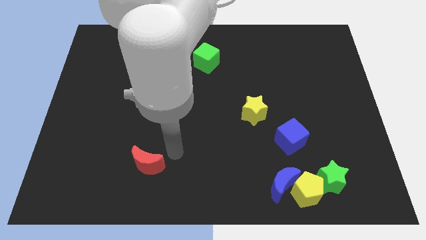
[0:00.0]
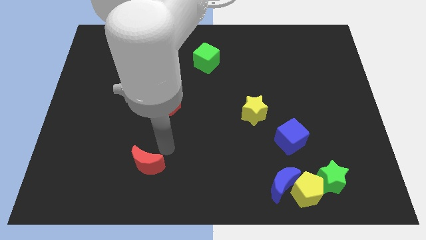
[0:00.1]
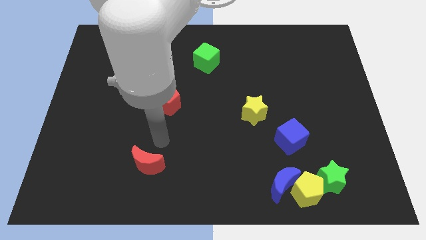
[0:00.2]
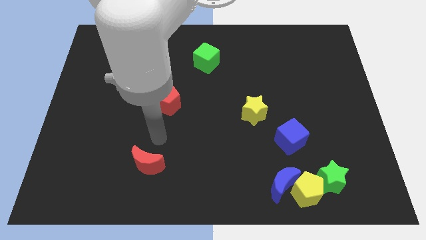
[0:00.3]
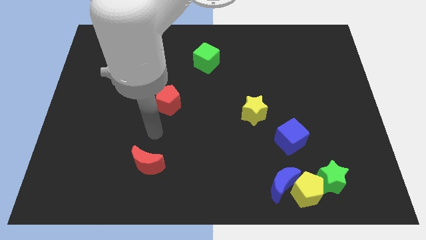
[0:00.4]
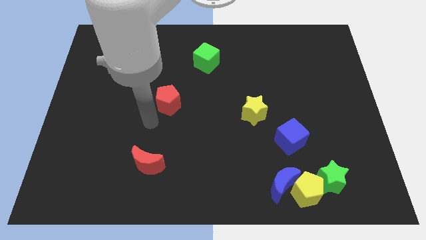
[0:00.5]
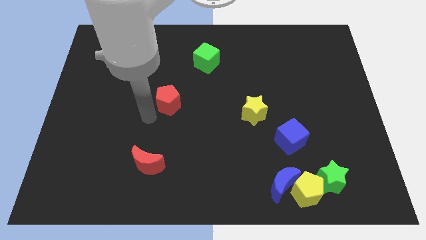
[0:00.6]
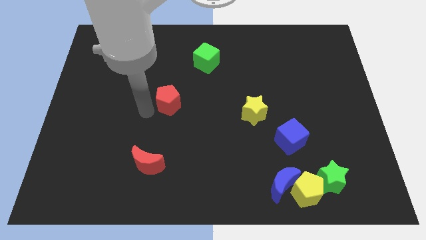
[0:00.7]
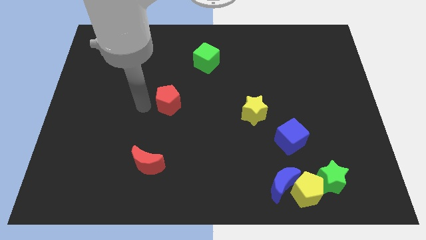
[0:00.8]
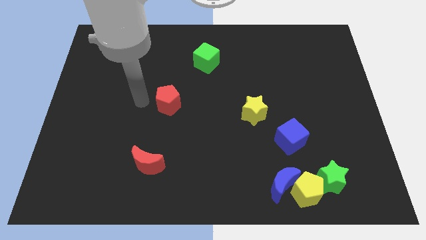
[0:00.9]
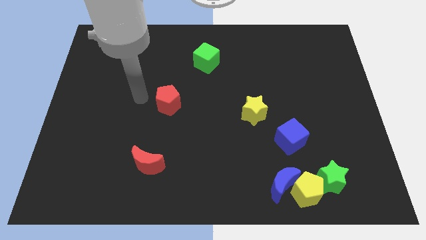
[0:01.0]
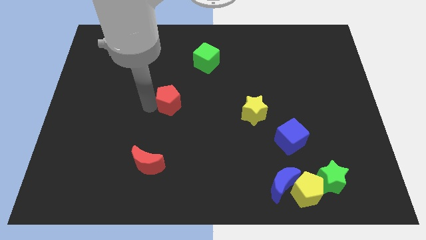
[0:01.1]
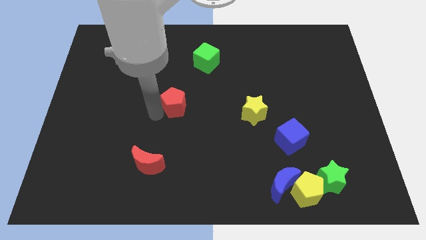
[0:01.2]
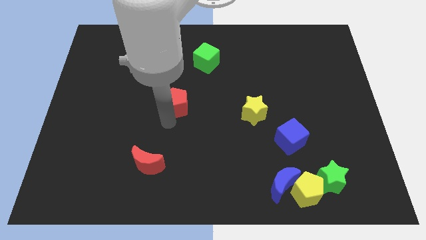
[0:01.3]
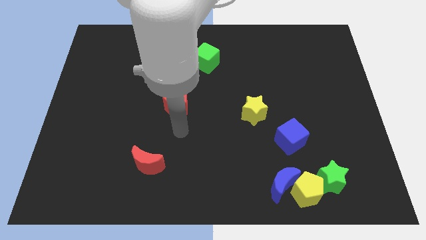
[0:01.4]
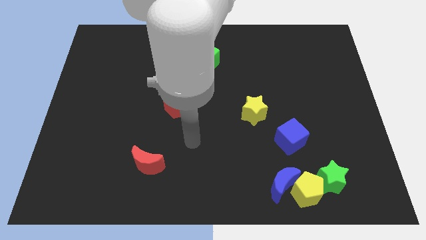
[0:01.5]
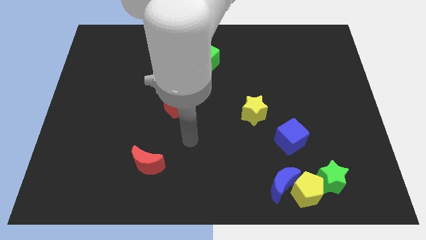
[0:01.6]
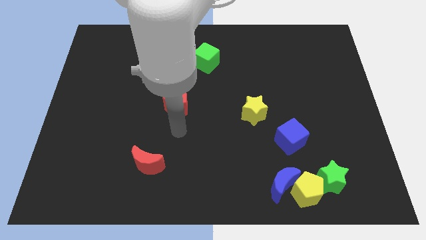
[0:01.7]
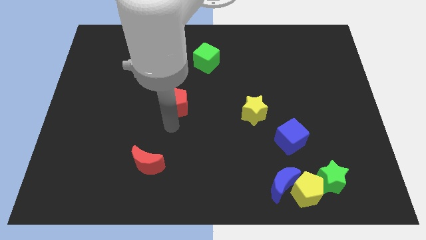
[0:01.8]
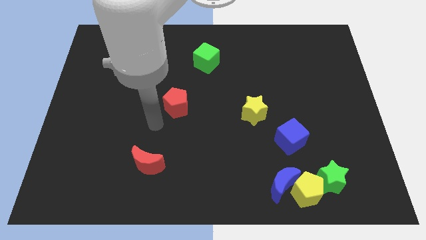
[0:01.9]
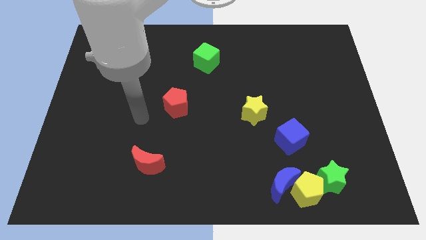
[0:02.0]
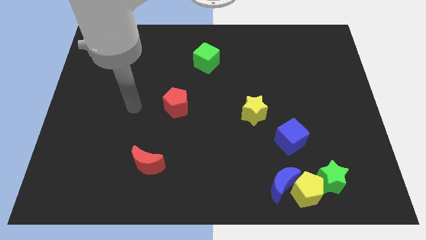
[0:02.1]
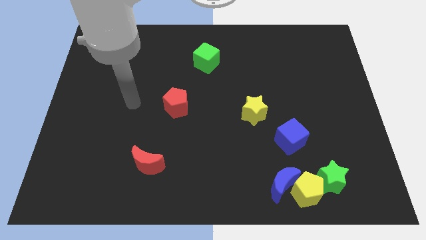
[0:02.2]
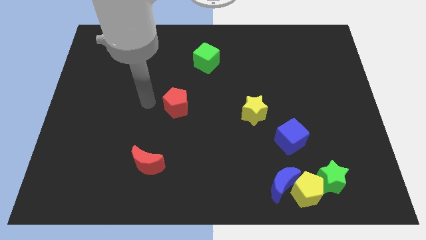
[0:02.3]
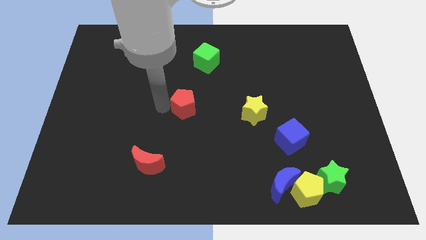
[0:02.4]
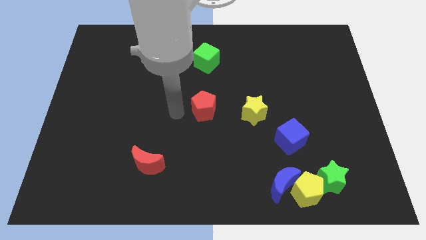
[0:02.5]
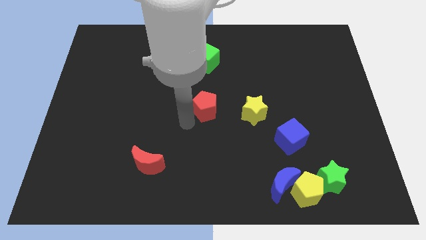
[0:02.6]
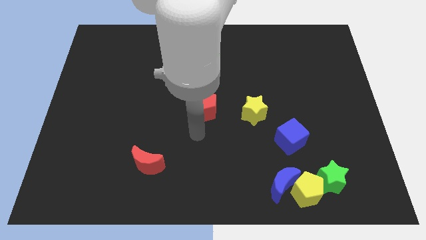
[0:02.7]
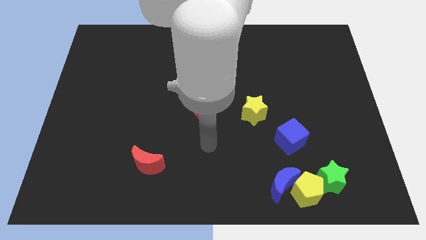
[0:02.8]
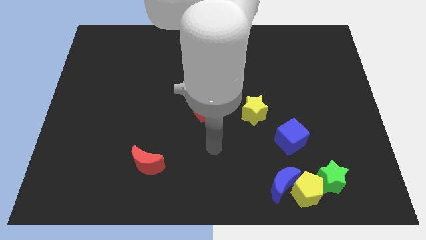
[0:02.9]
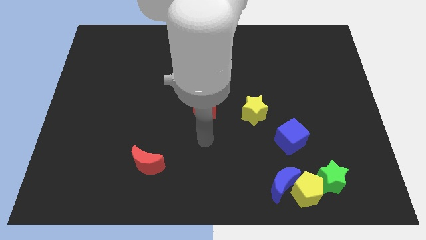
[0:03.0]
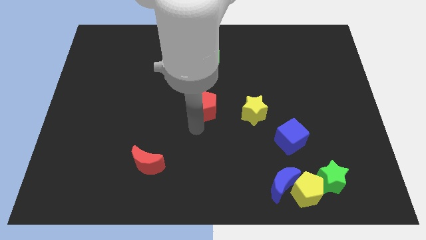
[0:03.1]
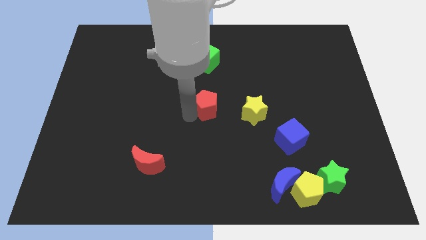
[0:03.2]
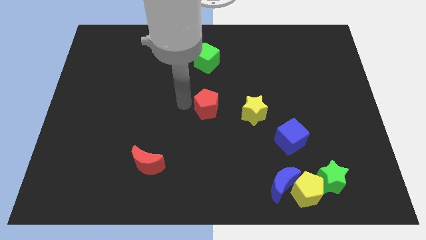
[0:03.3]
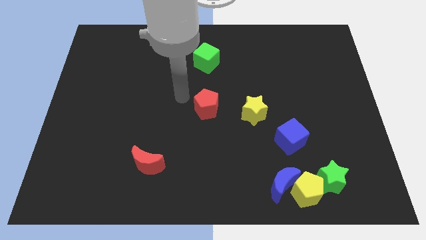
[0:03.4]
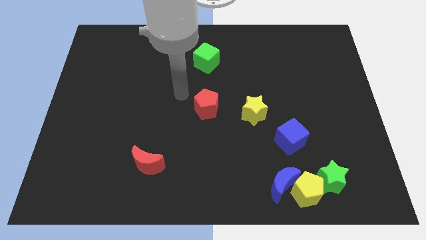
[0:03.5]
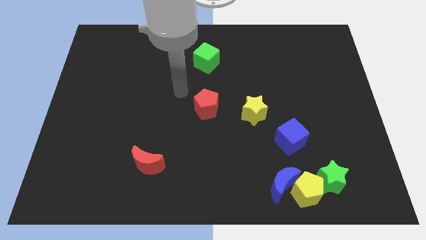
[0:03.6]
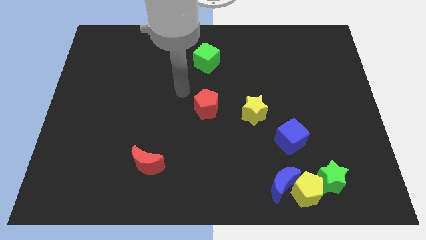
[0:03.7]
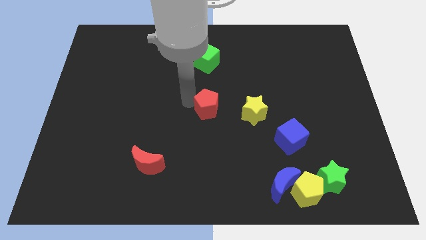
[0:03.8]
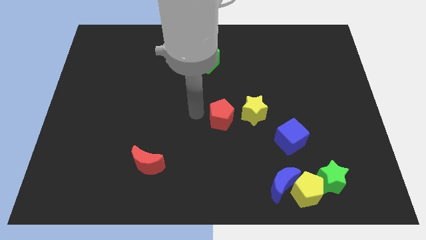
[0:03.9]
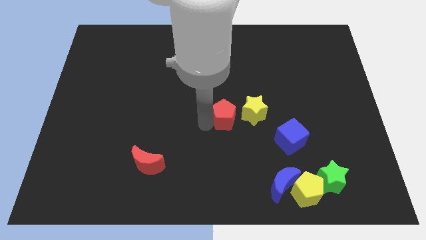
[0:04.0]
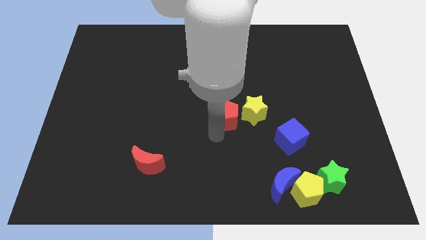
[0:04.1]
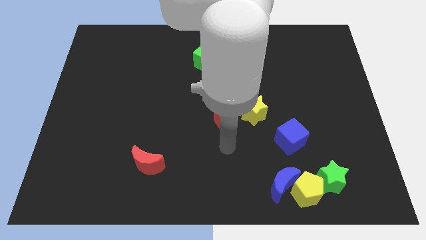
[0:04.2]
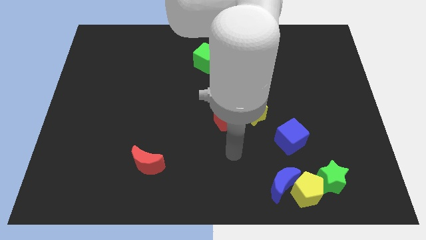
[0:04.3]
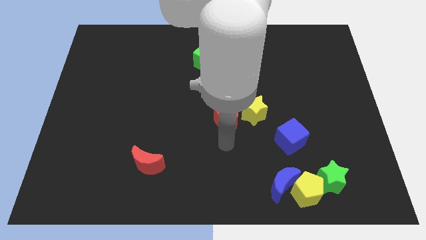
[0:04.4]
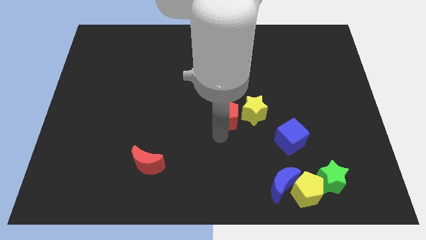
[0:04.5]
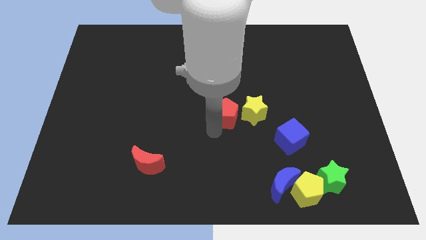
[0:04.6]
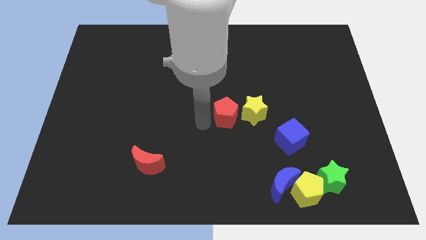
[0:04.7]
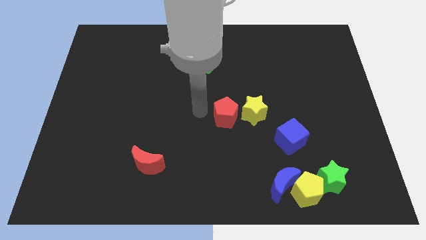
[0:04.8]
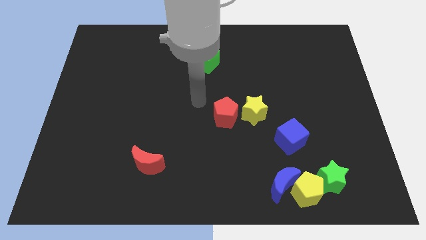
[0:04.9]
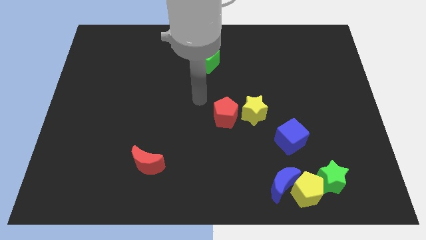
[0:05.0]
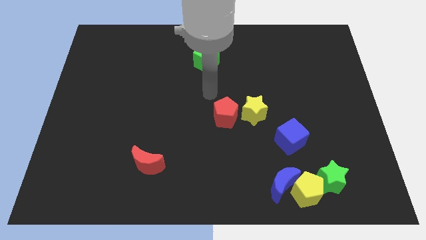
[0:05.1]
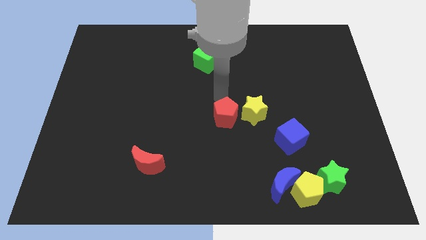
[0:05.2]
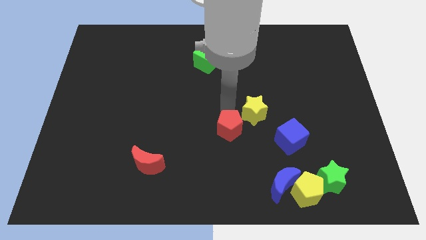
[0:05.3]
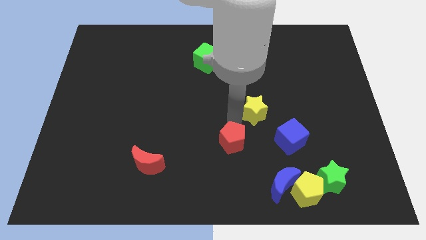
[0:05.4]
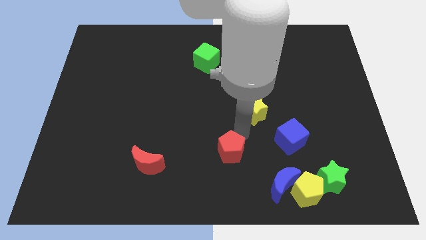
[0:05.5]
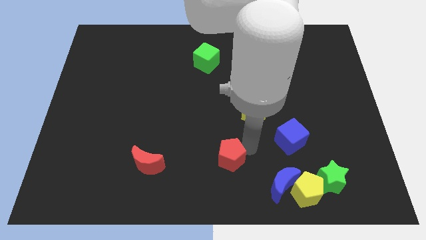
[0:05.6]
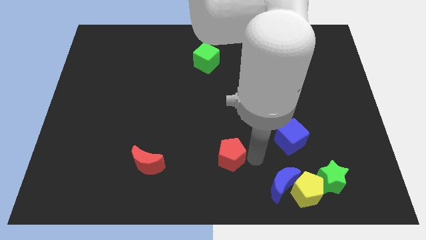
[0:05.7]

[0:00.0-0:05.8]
place the red pentagon below the yellow star

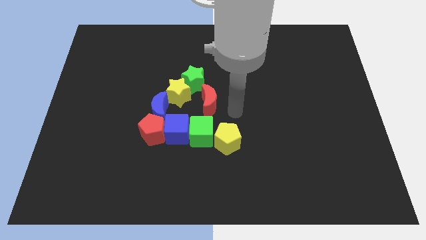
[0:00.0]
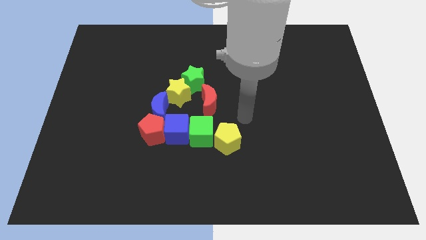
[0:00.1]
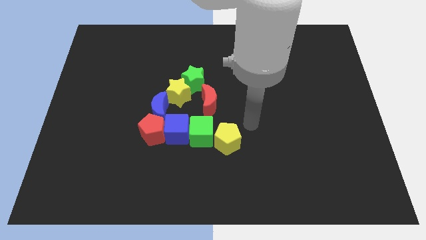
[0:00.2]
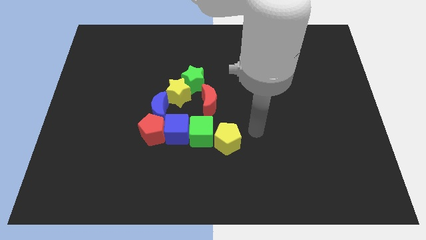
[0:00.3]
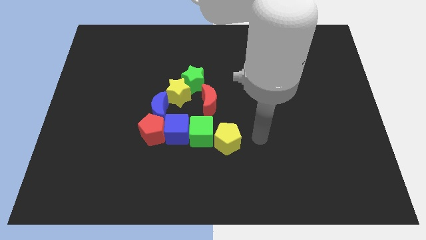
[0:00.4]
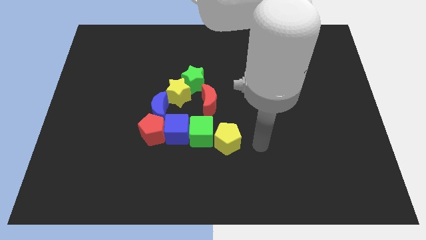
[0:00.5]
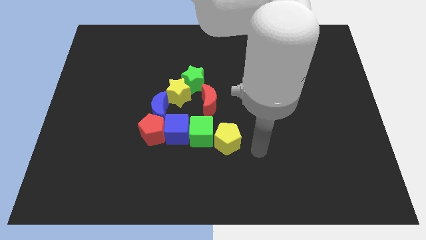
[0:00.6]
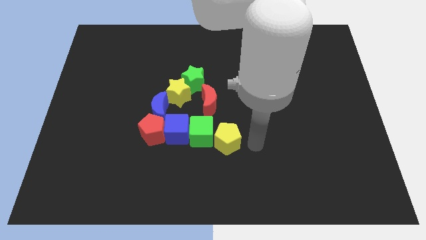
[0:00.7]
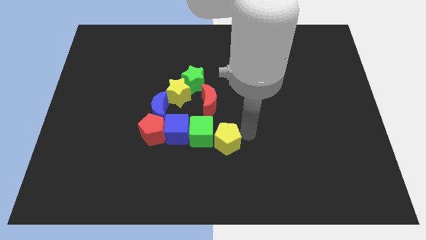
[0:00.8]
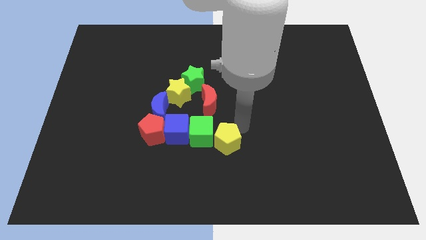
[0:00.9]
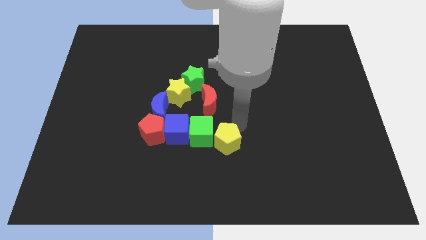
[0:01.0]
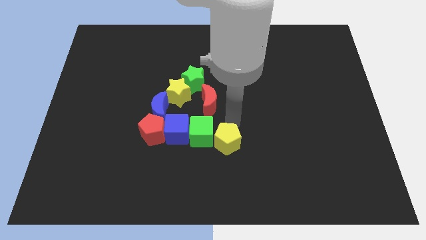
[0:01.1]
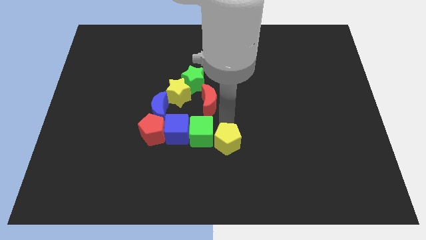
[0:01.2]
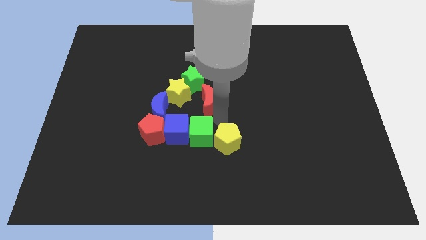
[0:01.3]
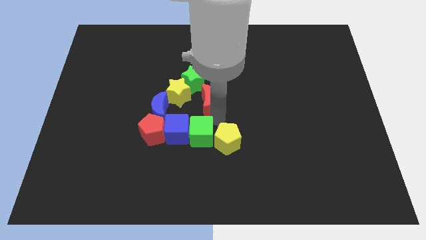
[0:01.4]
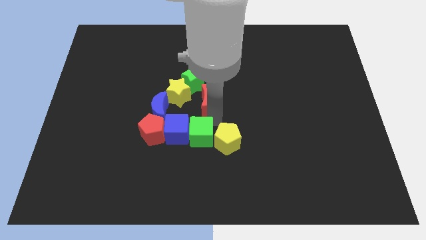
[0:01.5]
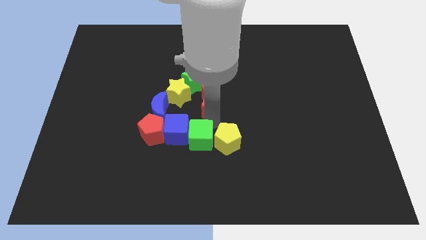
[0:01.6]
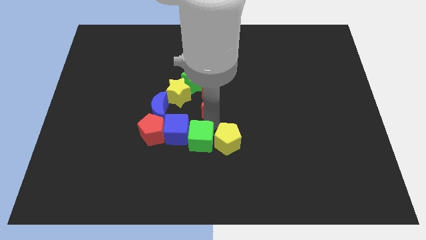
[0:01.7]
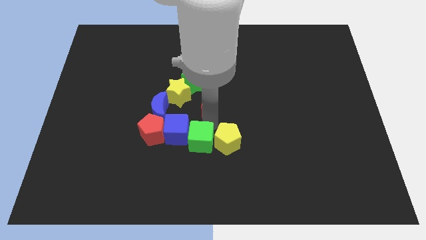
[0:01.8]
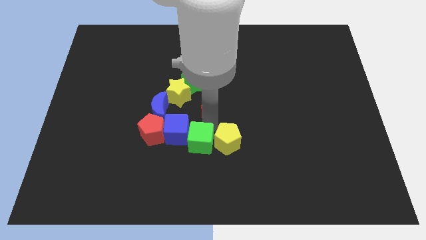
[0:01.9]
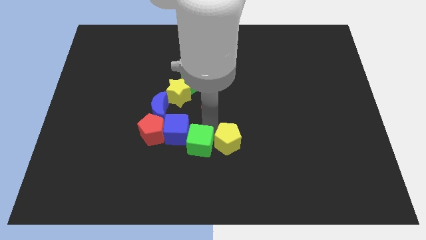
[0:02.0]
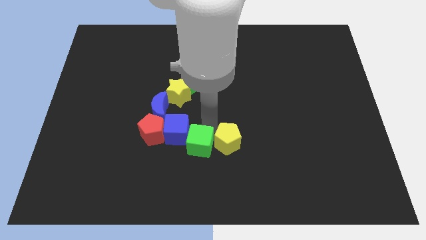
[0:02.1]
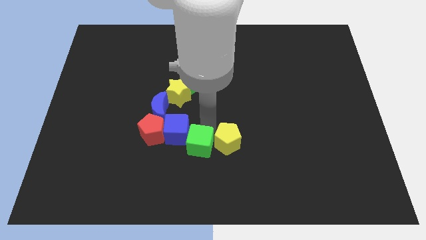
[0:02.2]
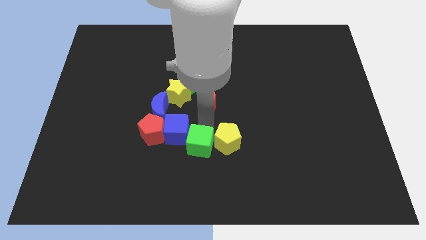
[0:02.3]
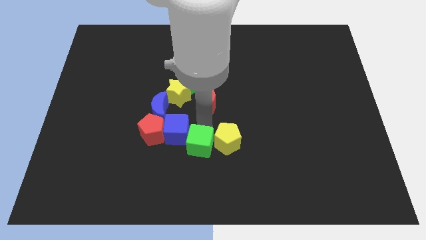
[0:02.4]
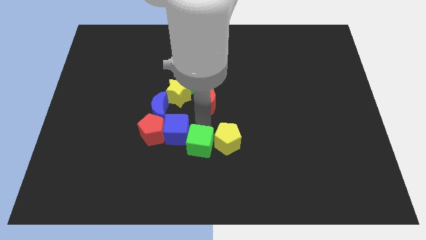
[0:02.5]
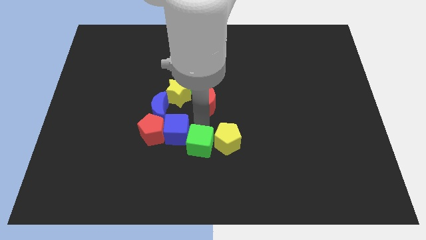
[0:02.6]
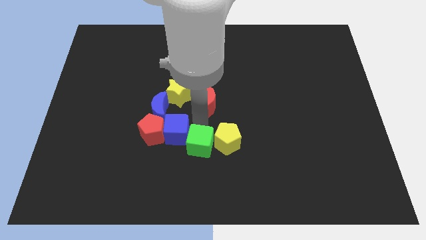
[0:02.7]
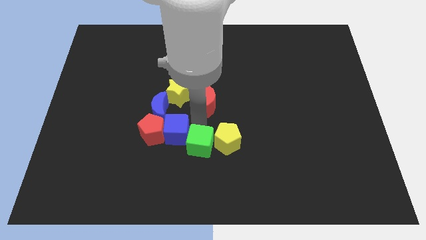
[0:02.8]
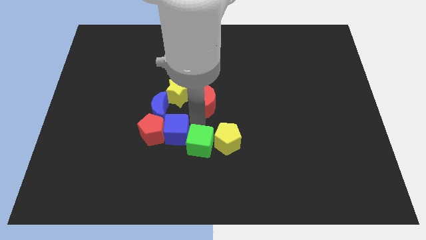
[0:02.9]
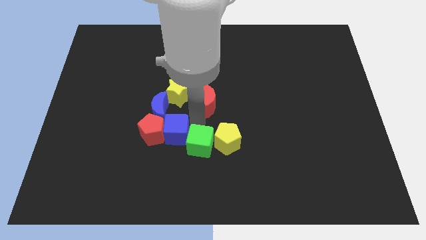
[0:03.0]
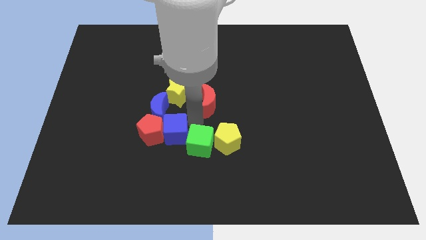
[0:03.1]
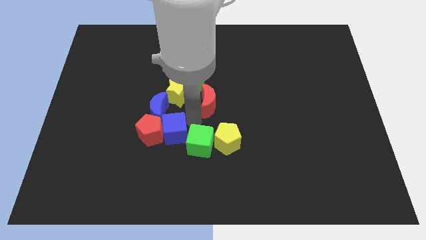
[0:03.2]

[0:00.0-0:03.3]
slightly push the green cube towards down
